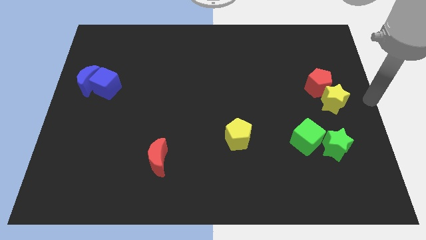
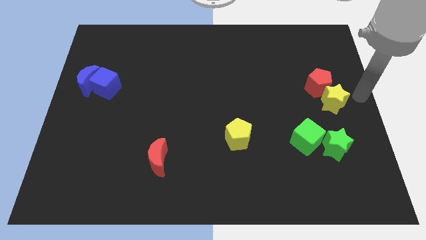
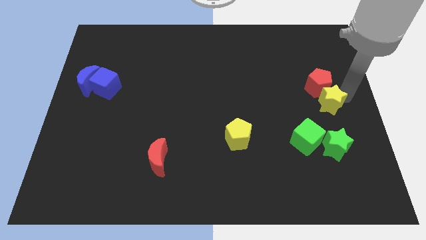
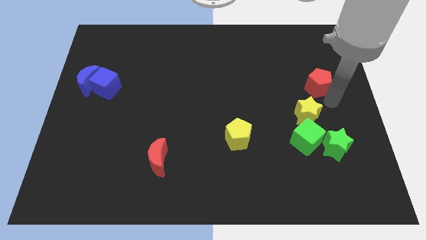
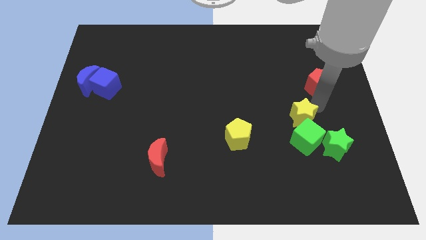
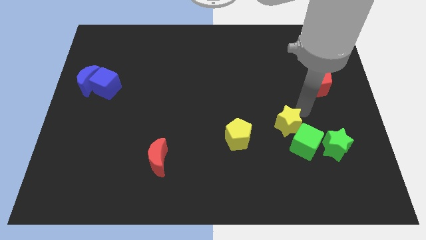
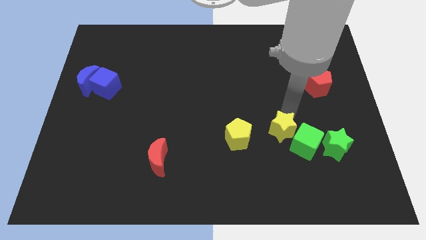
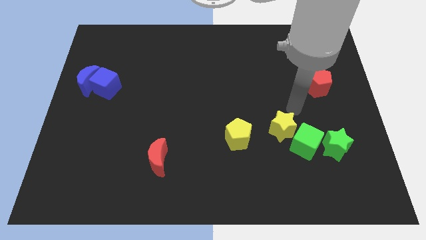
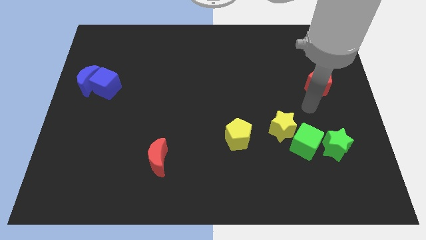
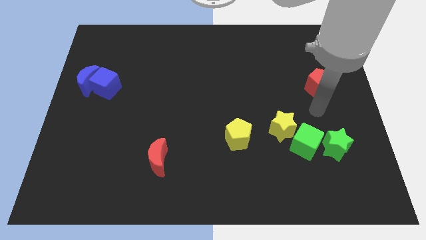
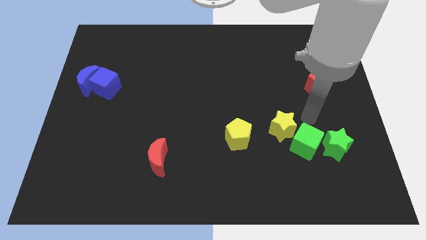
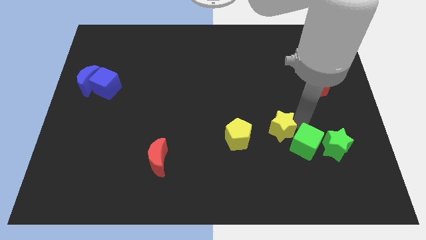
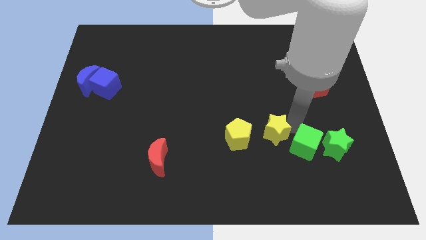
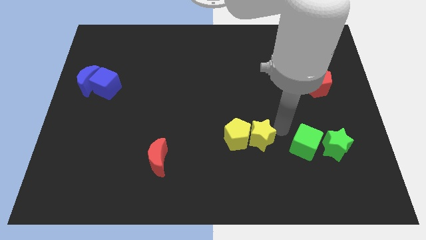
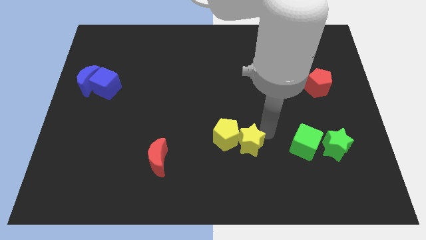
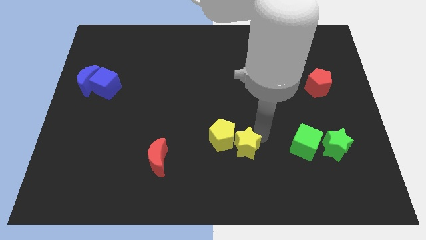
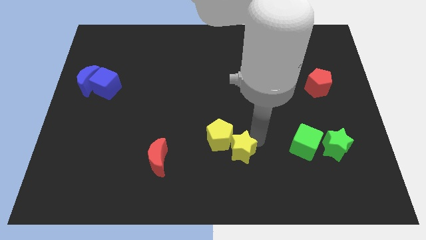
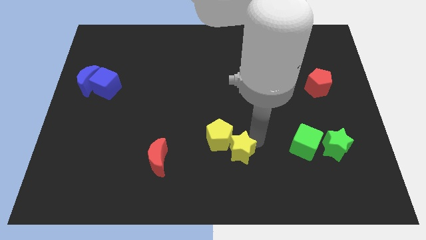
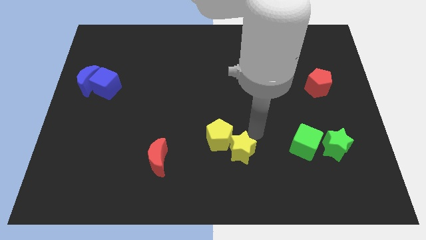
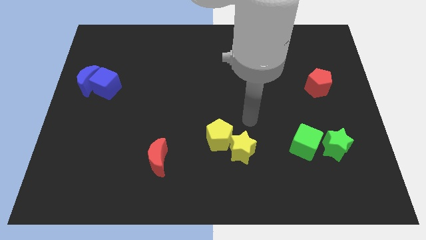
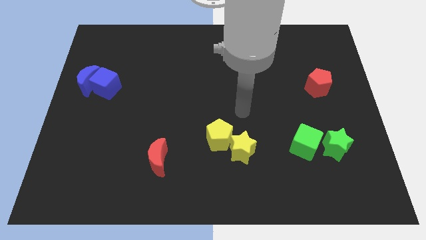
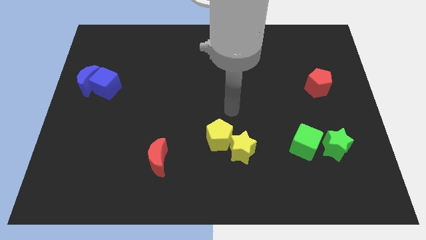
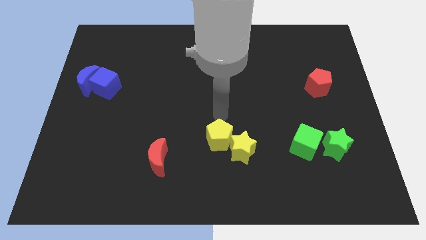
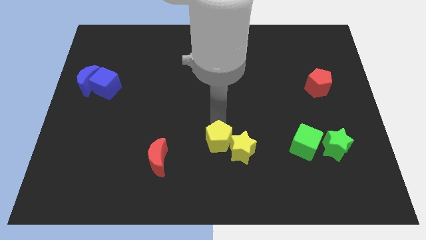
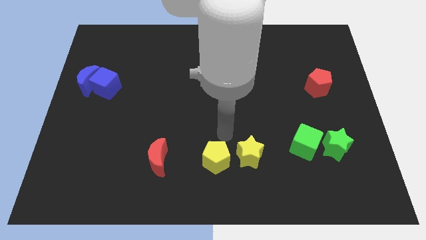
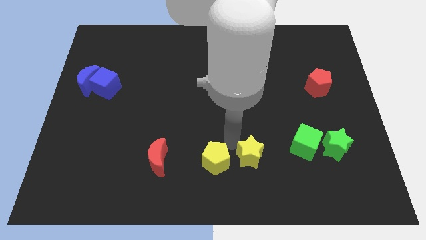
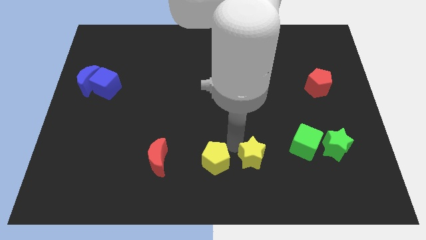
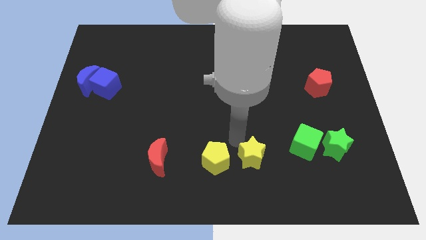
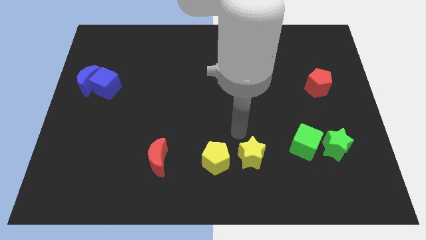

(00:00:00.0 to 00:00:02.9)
move the yellow blocks towards the bottom center of the board

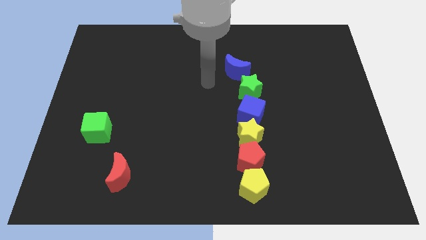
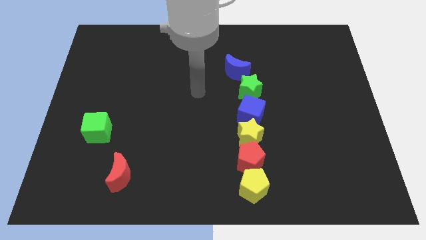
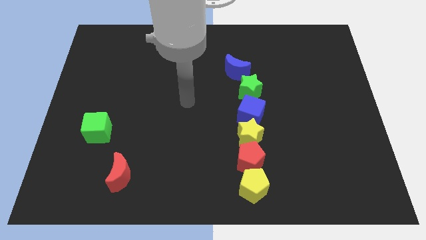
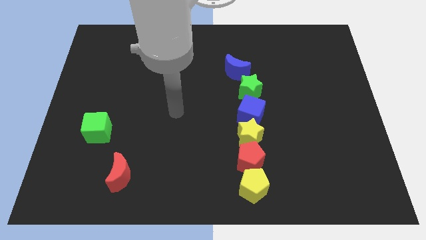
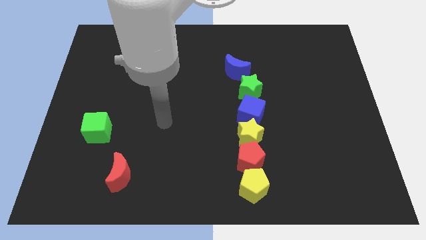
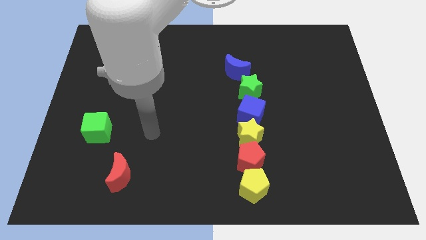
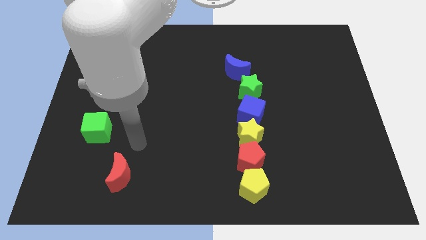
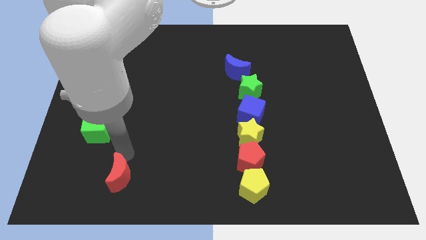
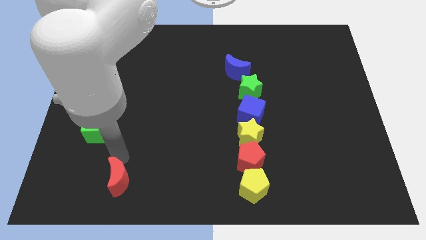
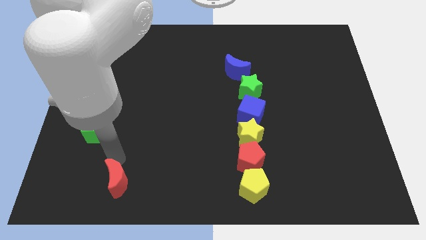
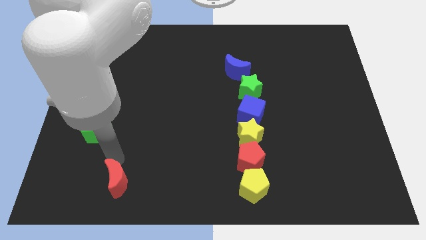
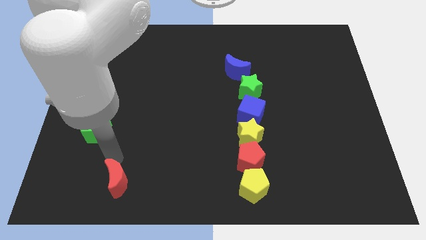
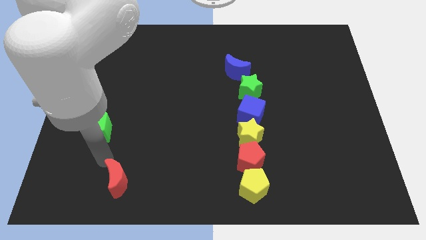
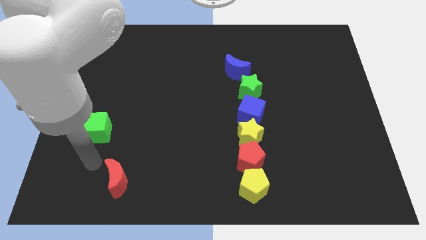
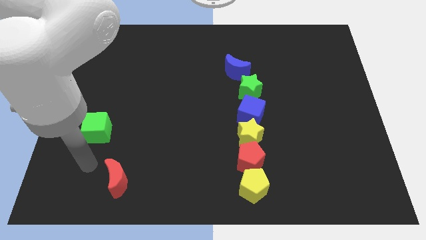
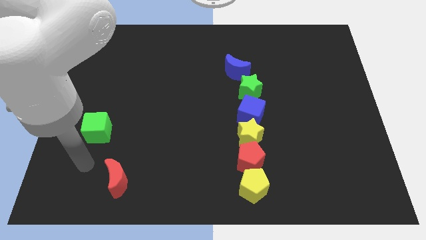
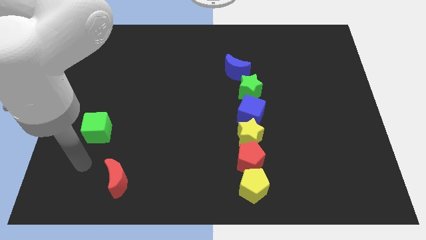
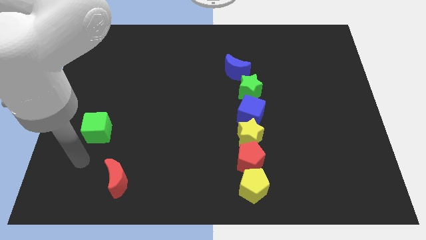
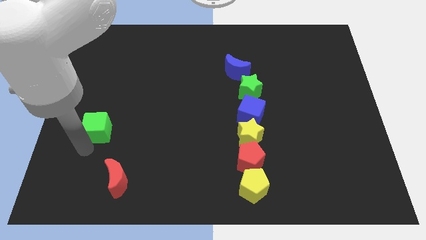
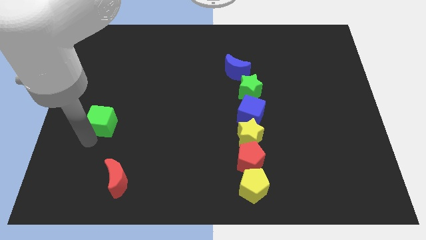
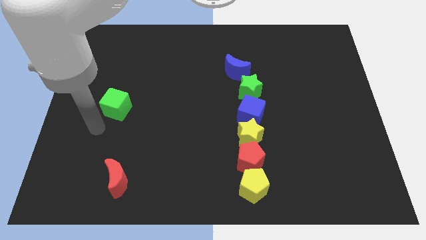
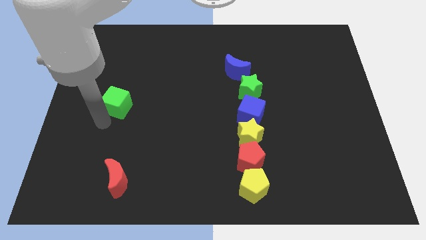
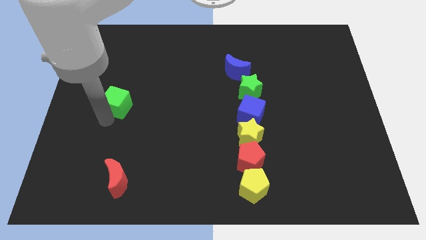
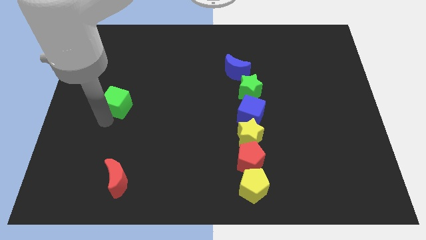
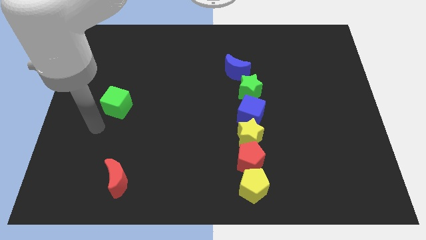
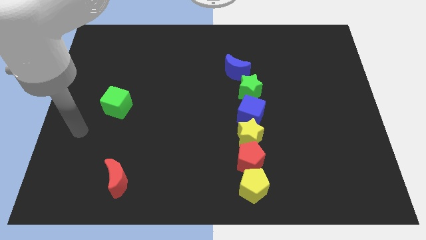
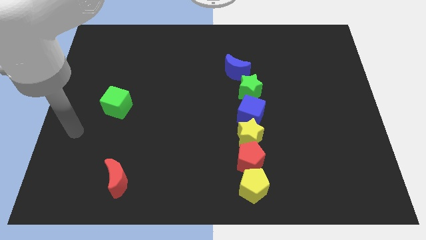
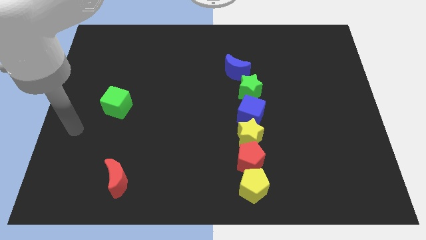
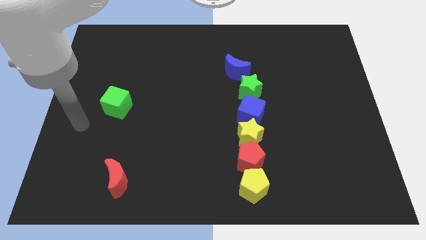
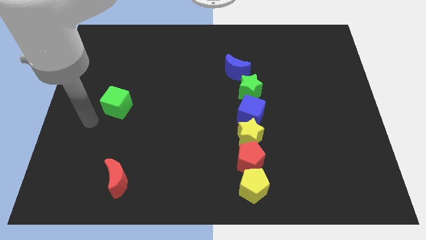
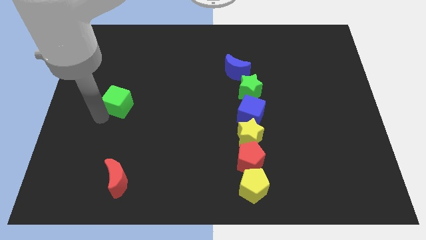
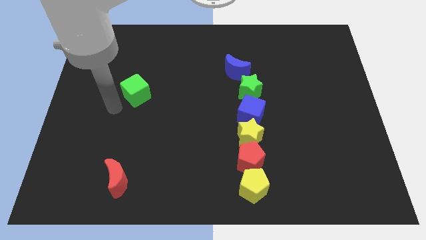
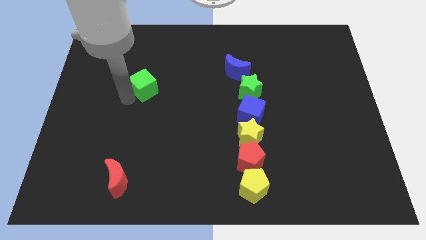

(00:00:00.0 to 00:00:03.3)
push the green cube towards top right side

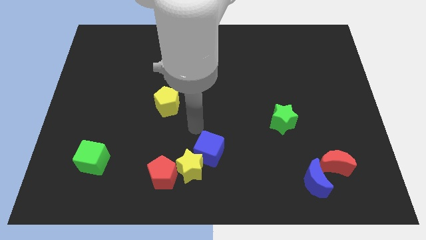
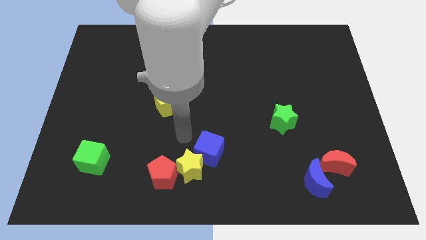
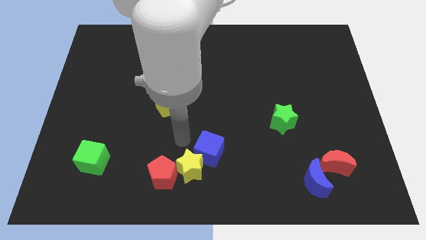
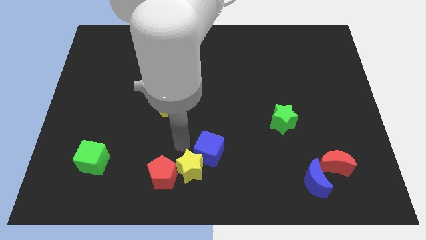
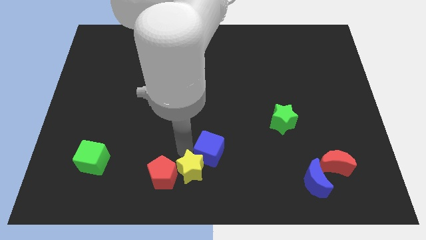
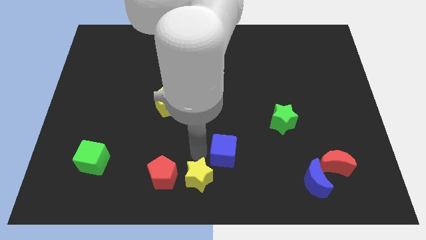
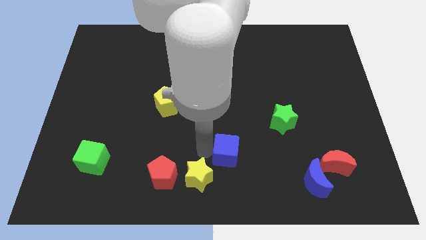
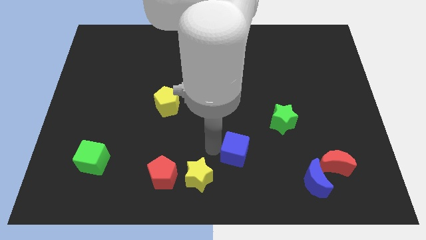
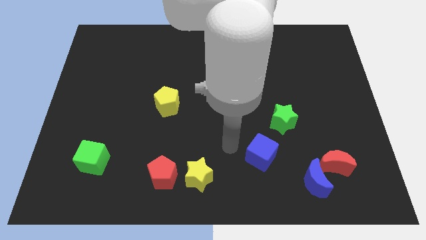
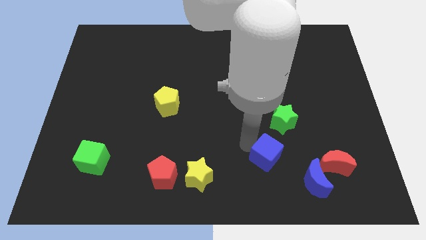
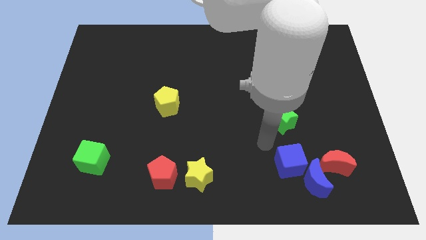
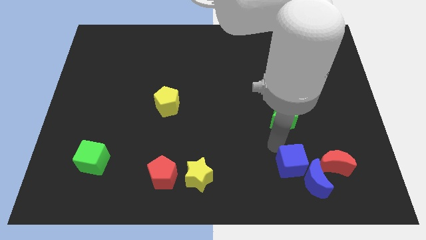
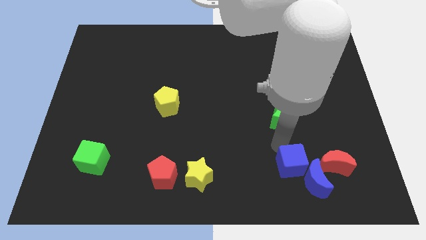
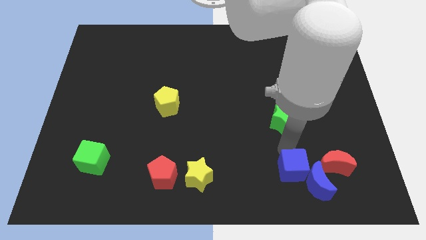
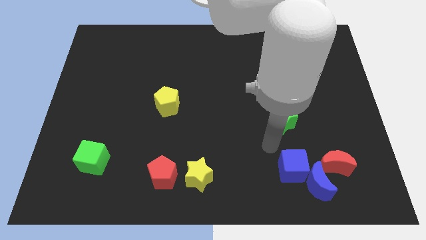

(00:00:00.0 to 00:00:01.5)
push the blue cube into the blue moon

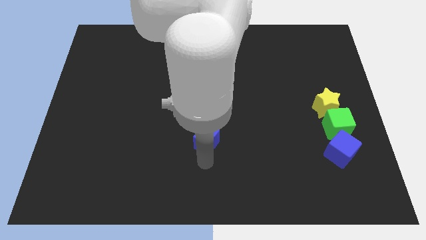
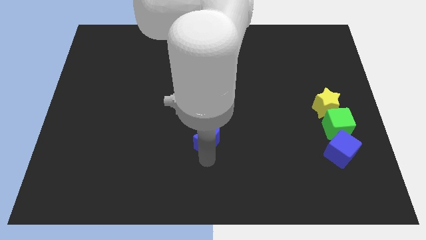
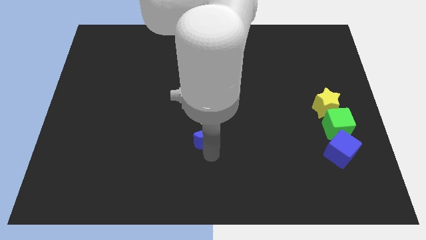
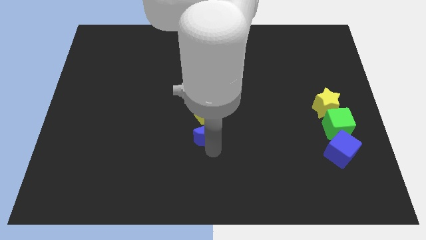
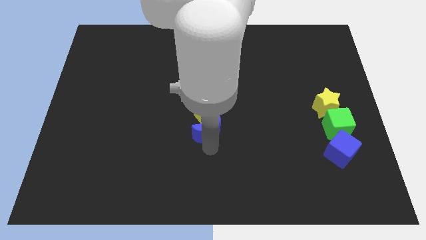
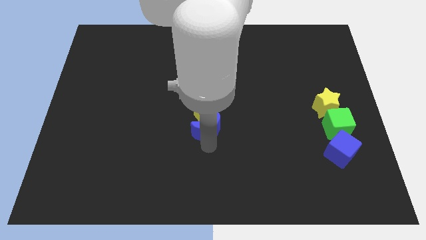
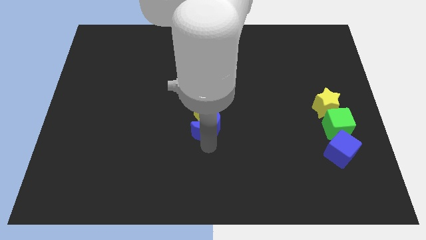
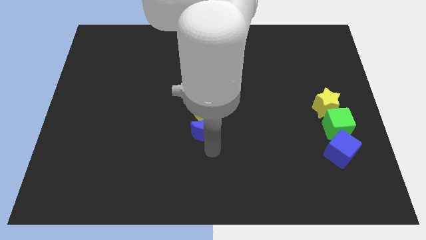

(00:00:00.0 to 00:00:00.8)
push the blue crescent to the top of the board

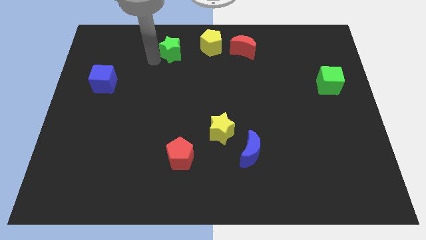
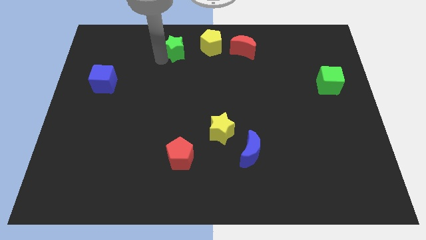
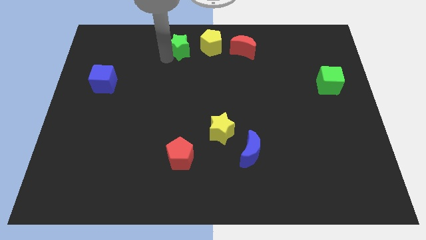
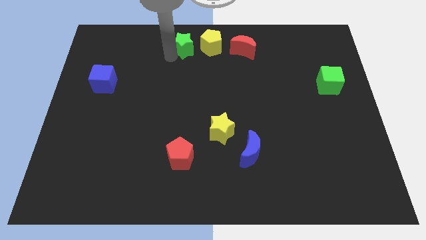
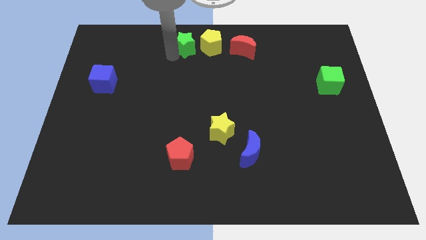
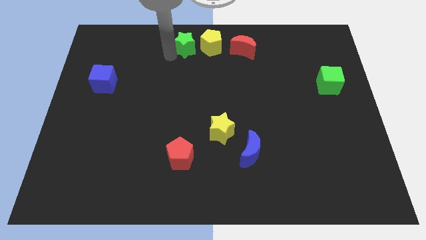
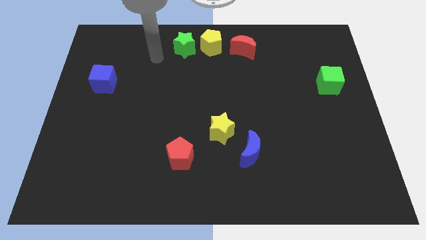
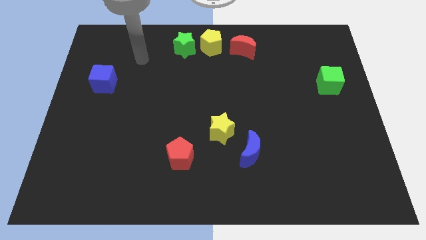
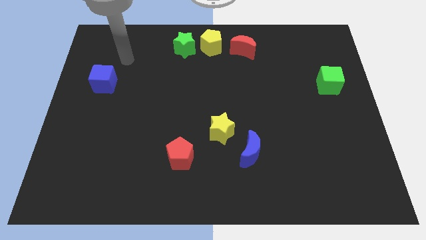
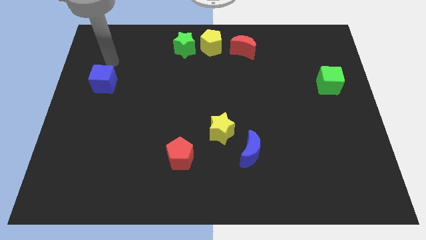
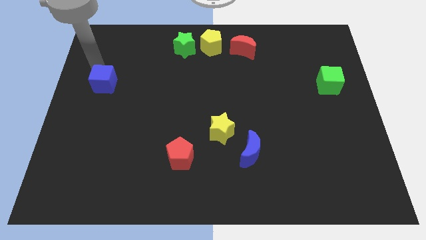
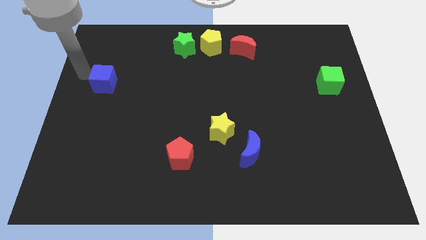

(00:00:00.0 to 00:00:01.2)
push green star close to yellow pentagon
